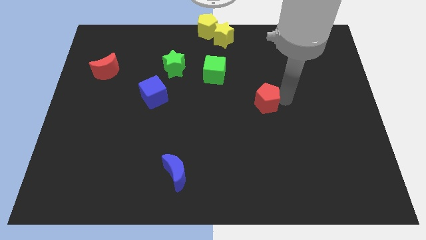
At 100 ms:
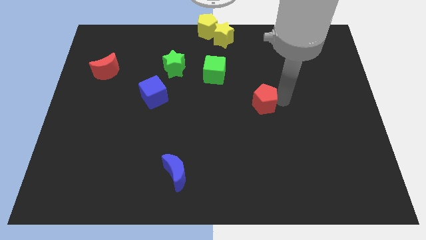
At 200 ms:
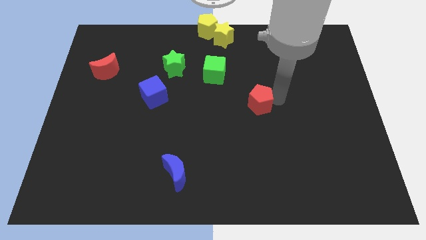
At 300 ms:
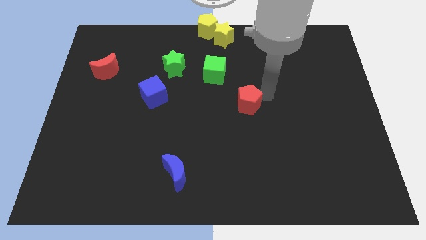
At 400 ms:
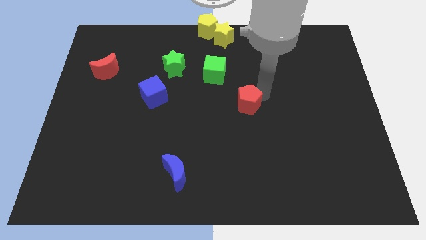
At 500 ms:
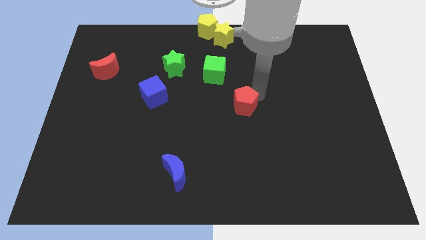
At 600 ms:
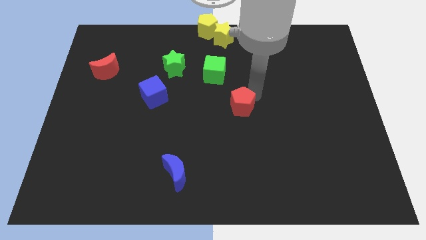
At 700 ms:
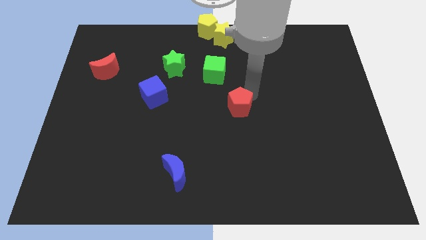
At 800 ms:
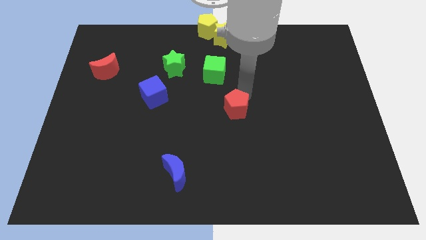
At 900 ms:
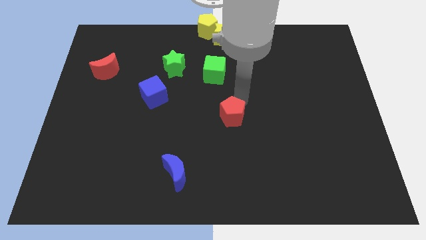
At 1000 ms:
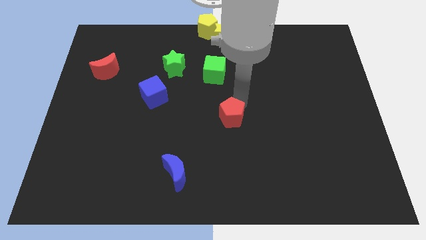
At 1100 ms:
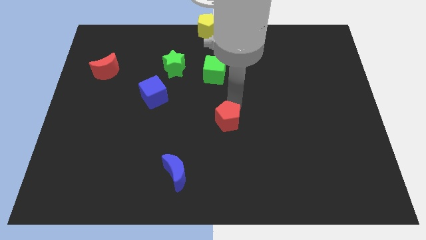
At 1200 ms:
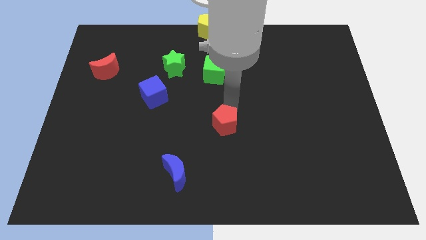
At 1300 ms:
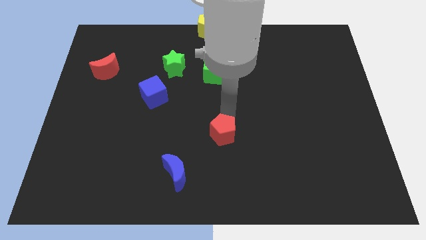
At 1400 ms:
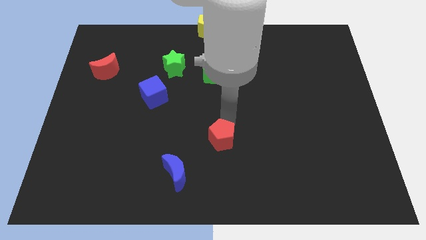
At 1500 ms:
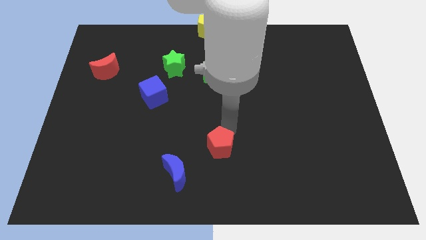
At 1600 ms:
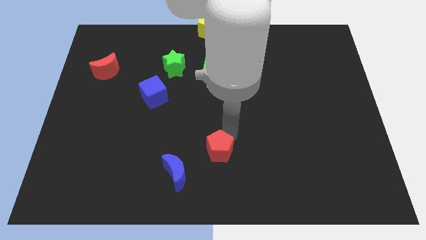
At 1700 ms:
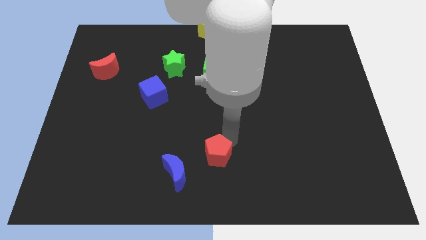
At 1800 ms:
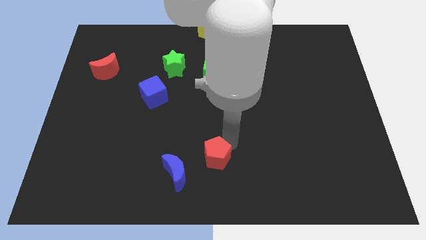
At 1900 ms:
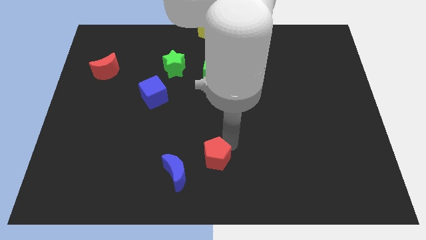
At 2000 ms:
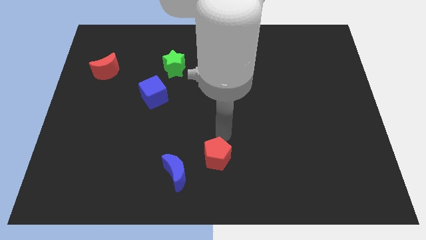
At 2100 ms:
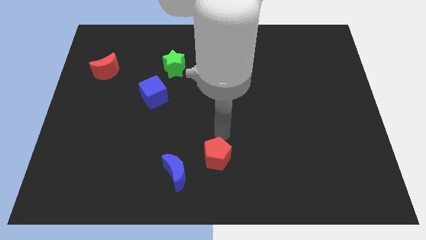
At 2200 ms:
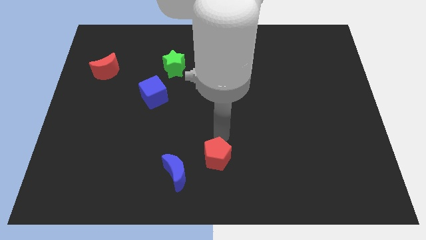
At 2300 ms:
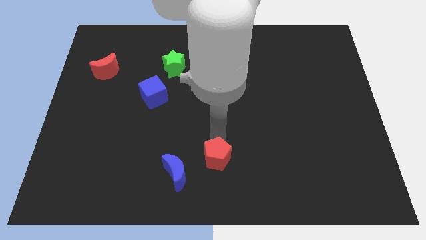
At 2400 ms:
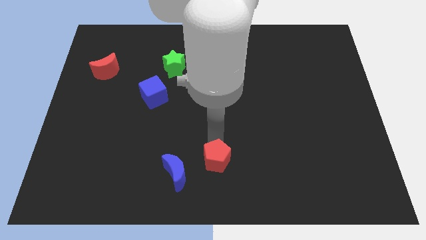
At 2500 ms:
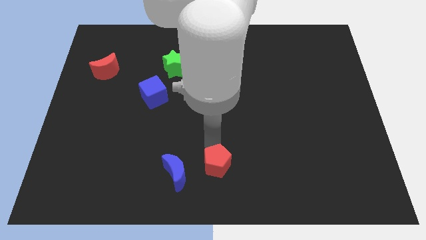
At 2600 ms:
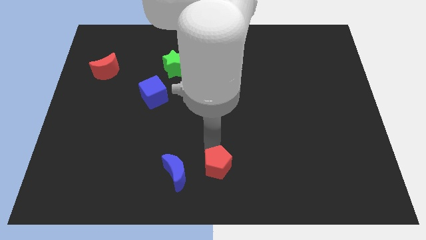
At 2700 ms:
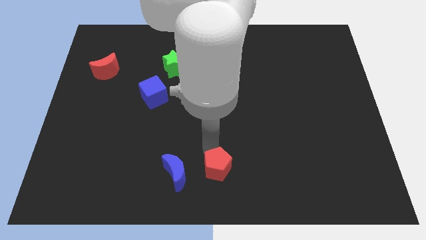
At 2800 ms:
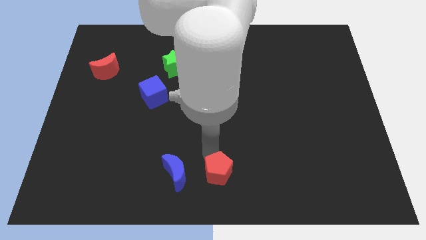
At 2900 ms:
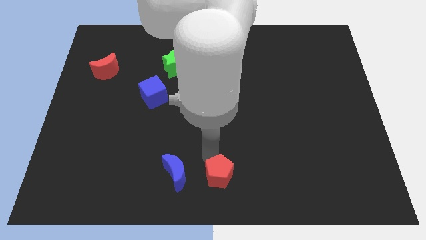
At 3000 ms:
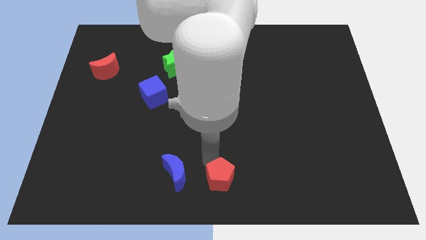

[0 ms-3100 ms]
move the red pentagon to the right side of the blue crescent

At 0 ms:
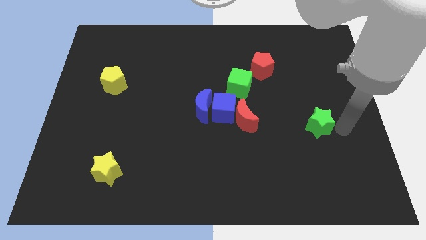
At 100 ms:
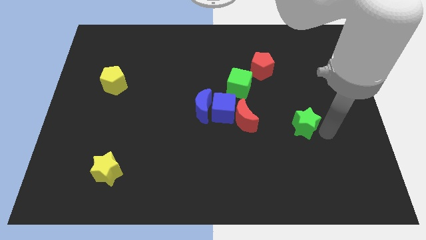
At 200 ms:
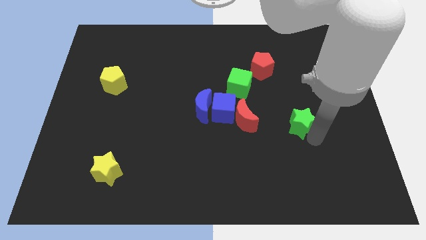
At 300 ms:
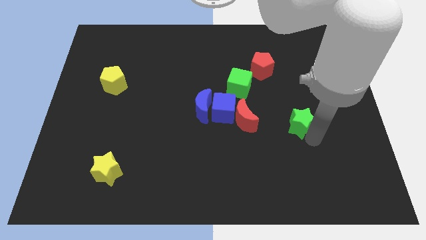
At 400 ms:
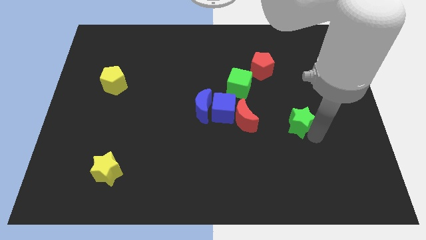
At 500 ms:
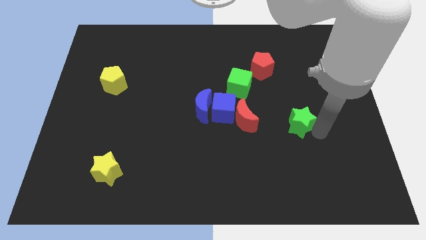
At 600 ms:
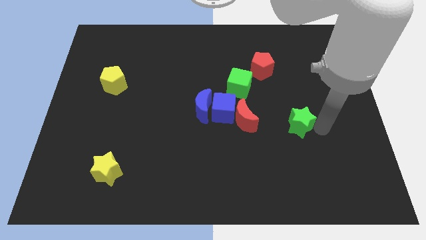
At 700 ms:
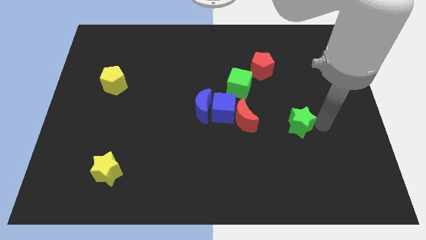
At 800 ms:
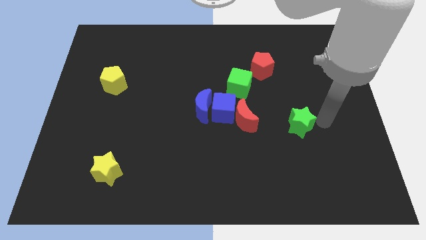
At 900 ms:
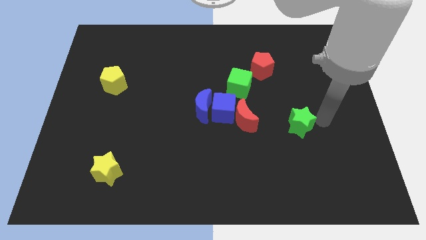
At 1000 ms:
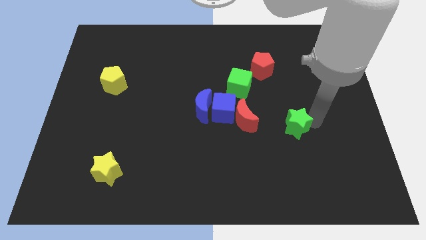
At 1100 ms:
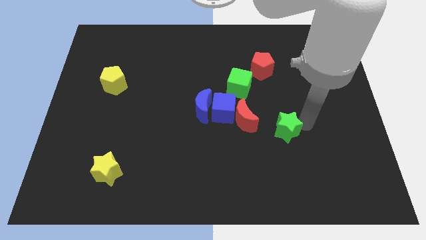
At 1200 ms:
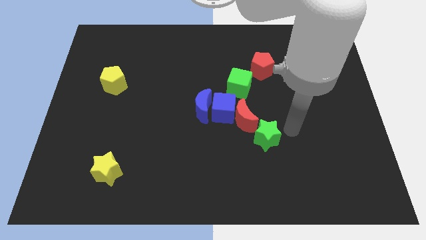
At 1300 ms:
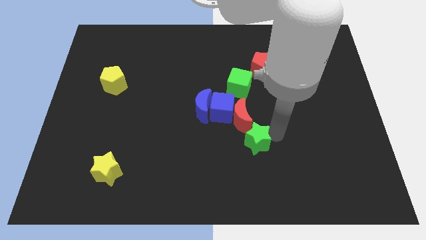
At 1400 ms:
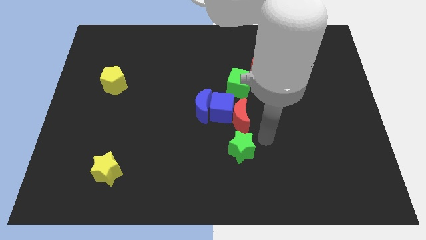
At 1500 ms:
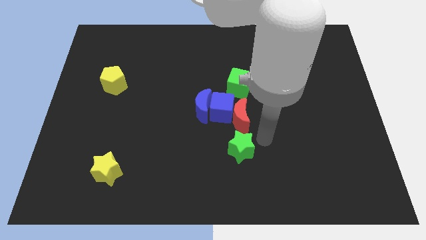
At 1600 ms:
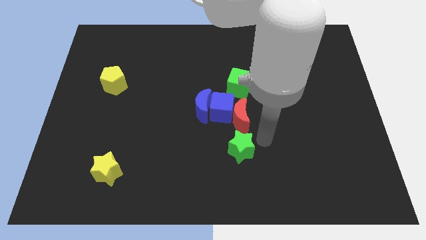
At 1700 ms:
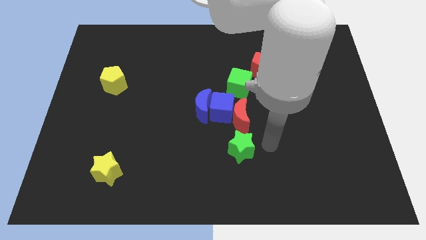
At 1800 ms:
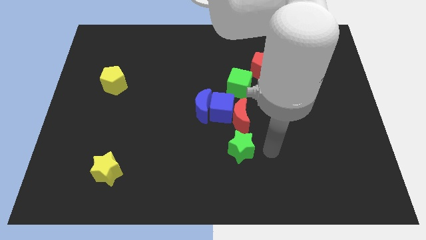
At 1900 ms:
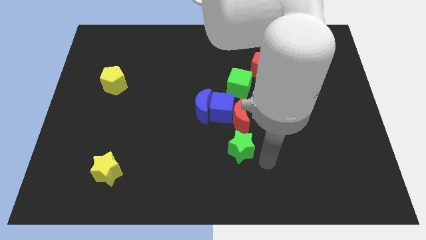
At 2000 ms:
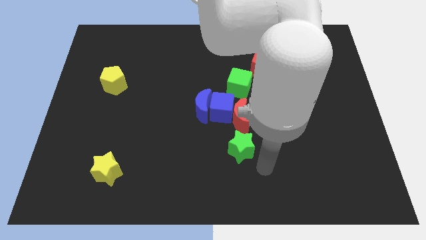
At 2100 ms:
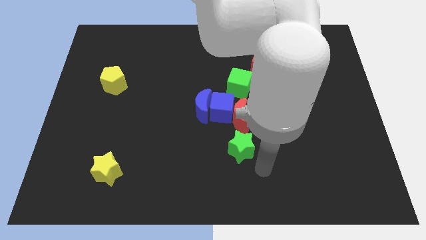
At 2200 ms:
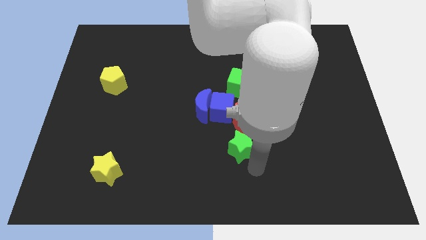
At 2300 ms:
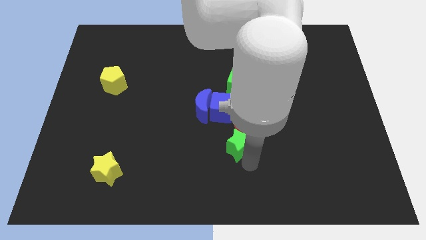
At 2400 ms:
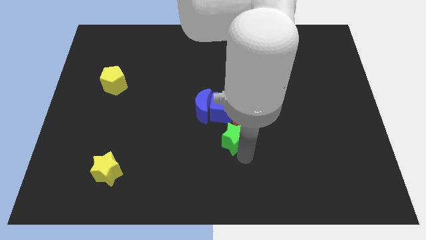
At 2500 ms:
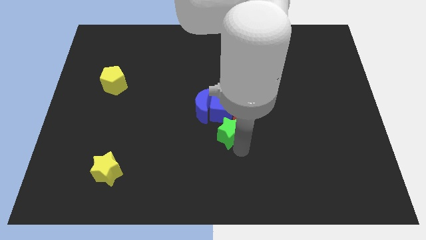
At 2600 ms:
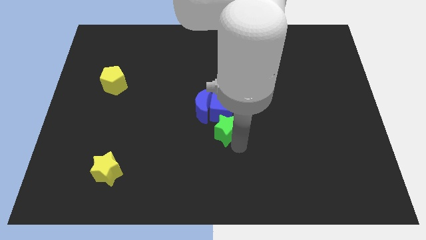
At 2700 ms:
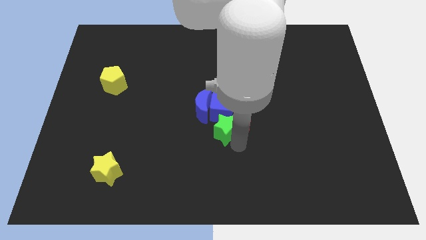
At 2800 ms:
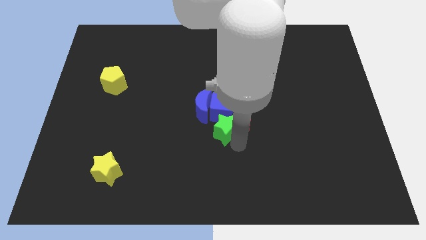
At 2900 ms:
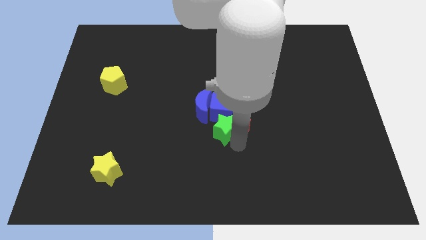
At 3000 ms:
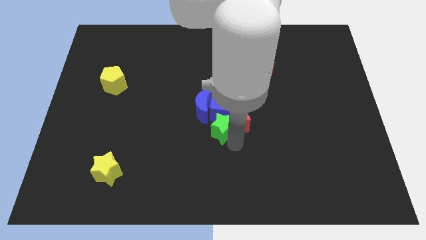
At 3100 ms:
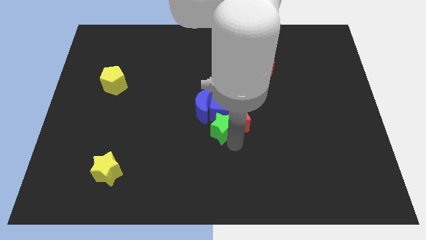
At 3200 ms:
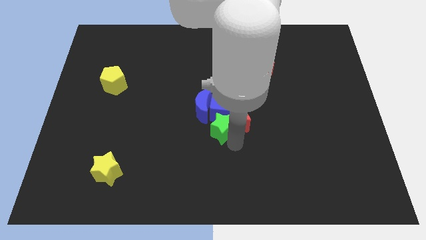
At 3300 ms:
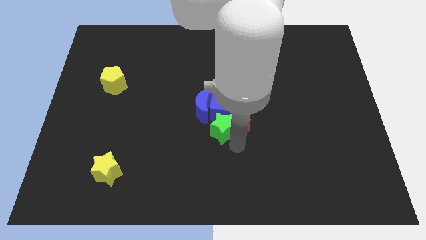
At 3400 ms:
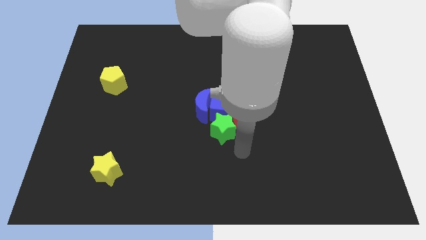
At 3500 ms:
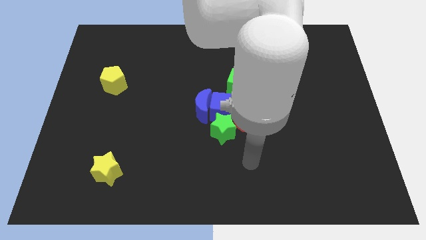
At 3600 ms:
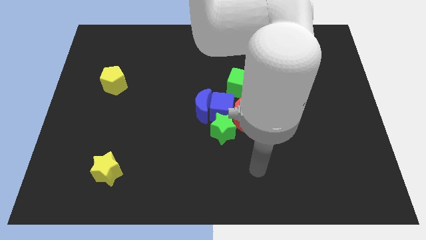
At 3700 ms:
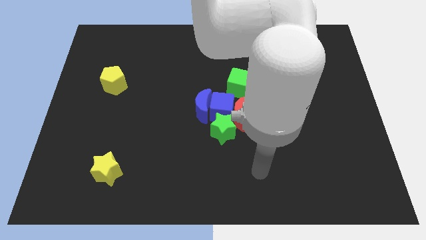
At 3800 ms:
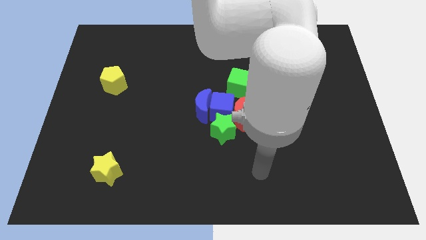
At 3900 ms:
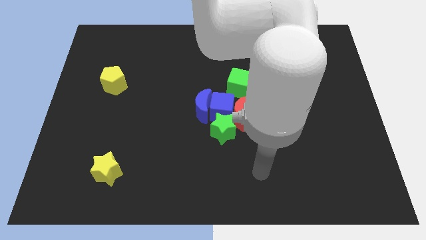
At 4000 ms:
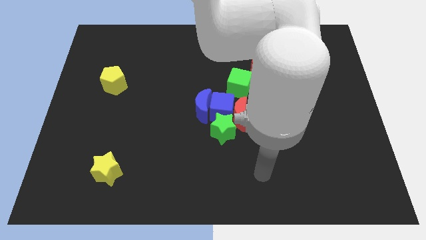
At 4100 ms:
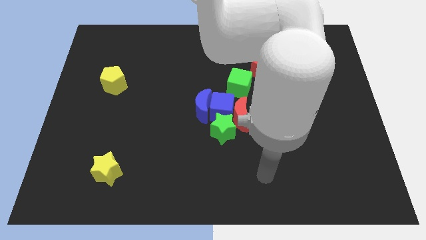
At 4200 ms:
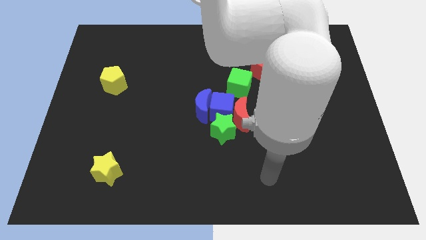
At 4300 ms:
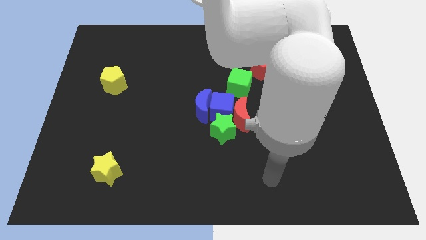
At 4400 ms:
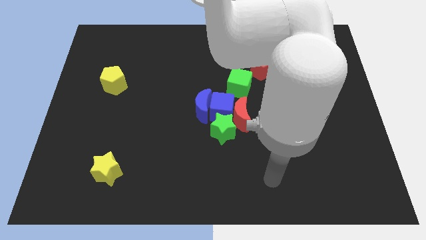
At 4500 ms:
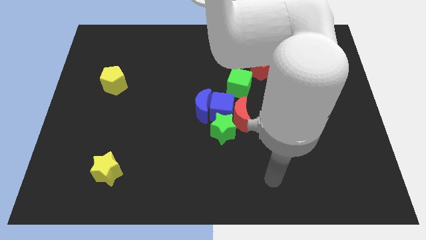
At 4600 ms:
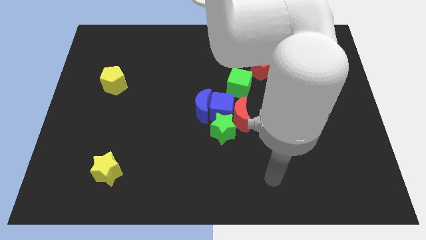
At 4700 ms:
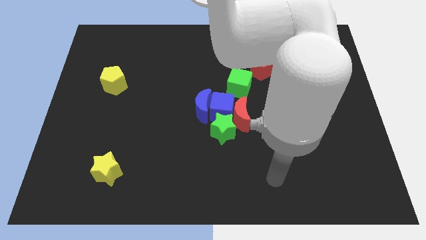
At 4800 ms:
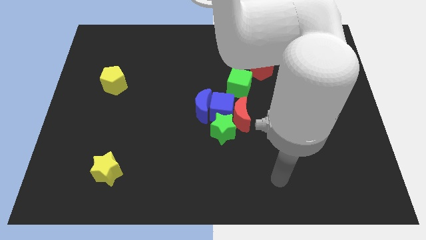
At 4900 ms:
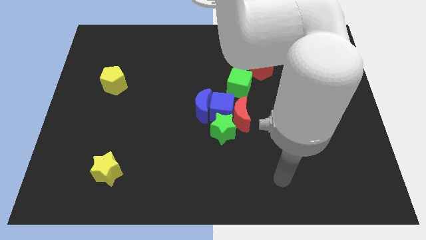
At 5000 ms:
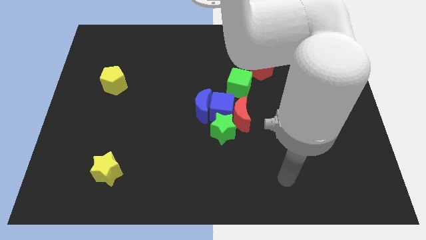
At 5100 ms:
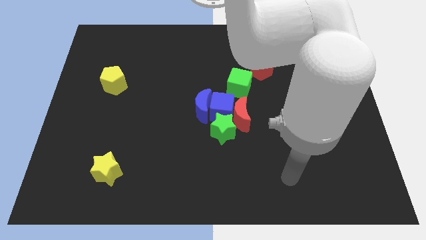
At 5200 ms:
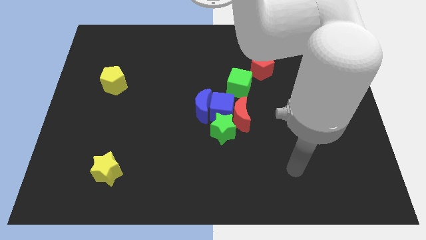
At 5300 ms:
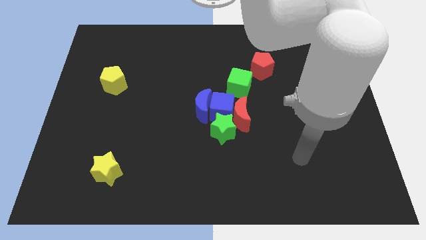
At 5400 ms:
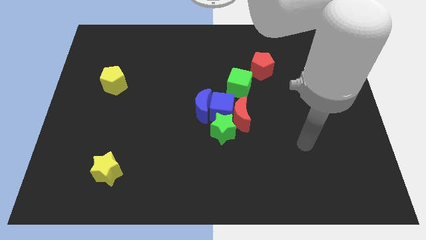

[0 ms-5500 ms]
place a group of blocks at the center of the board

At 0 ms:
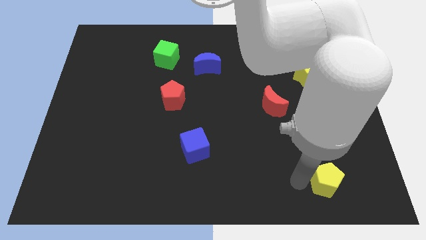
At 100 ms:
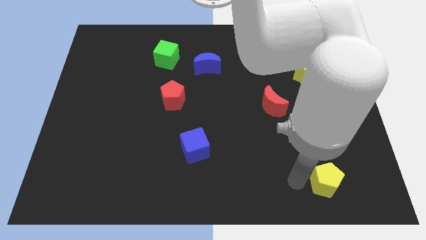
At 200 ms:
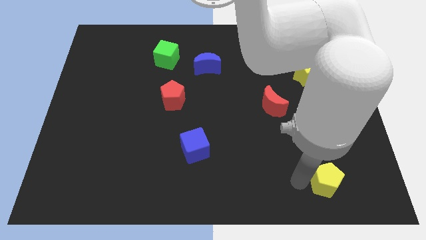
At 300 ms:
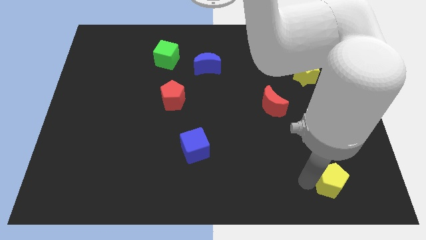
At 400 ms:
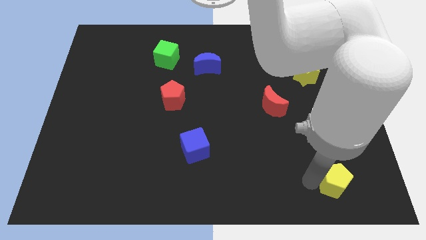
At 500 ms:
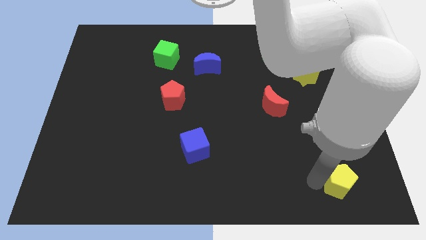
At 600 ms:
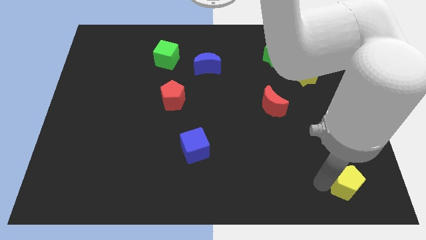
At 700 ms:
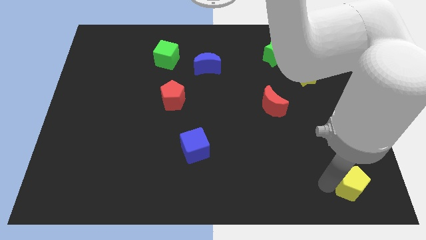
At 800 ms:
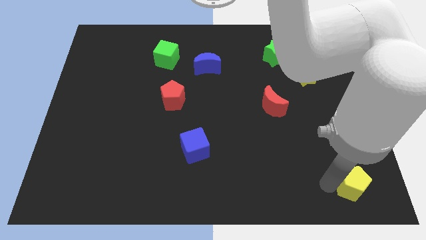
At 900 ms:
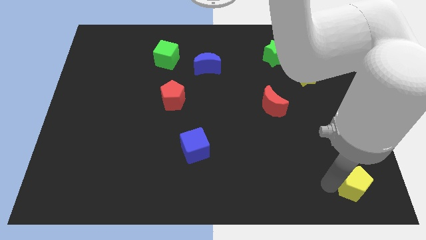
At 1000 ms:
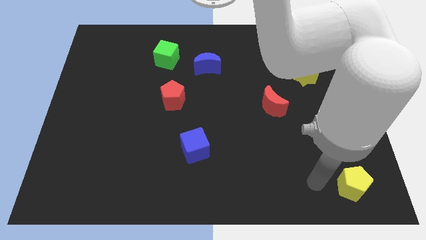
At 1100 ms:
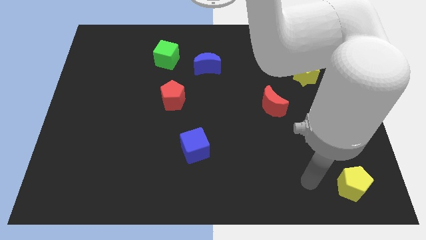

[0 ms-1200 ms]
slide the yellow pentagon towards the right side of the board
